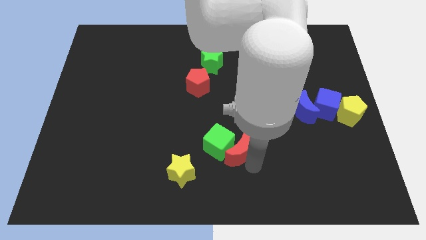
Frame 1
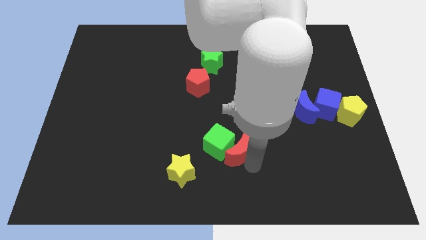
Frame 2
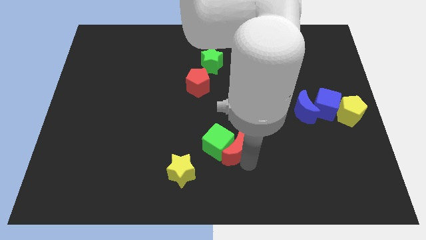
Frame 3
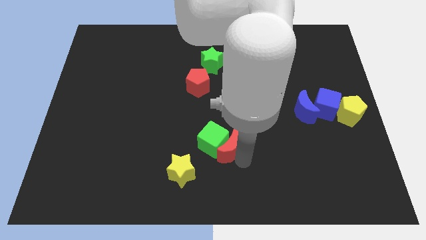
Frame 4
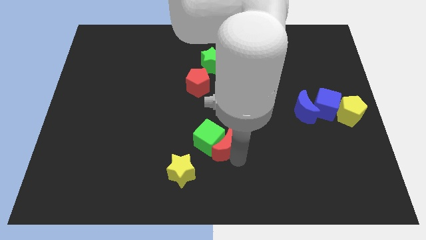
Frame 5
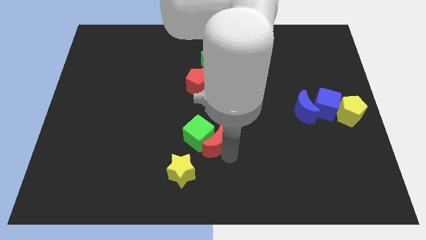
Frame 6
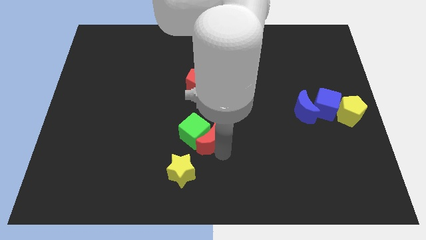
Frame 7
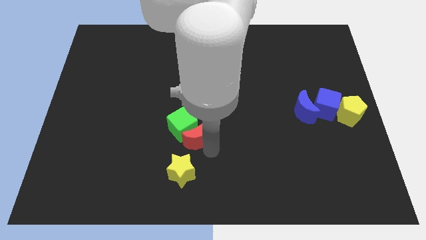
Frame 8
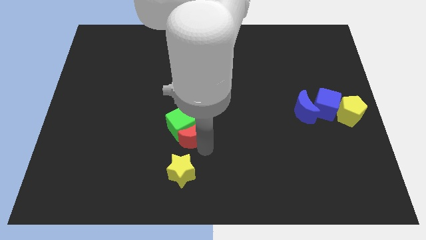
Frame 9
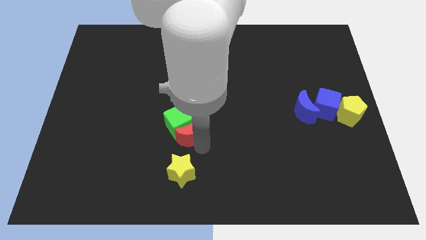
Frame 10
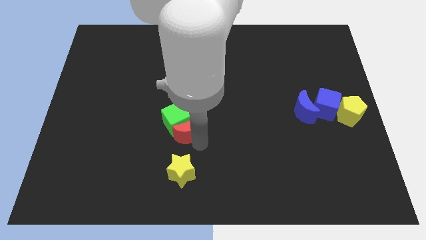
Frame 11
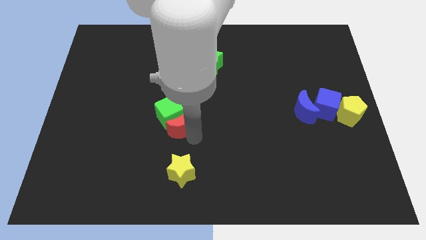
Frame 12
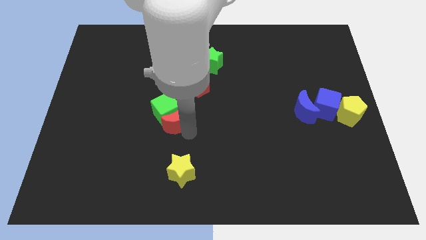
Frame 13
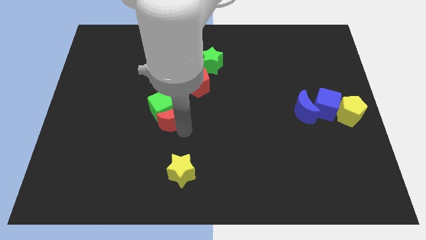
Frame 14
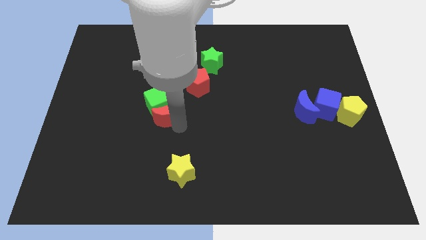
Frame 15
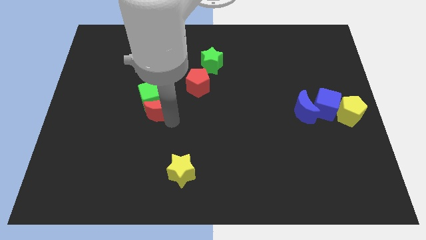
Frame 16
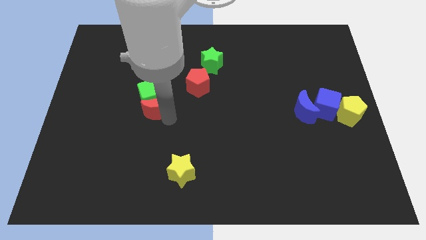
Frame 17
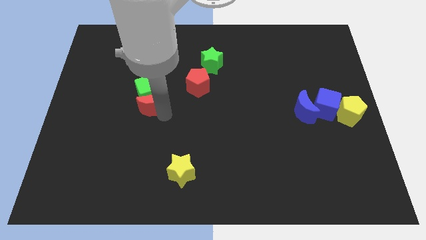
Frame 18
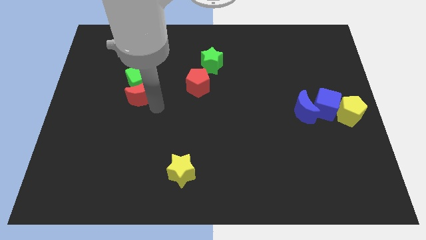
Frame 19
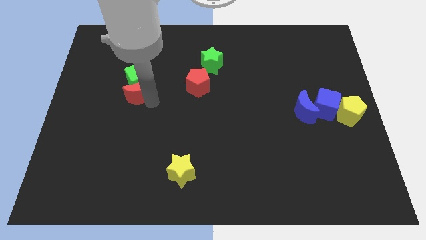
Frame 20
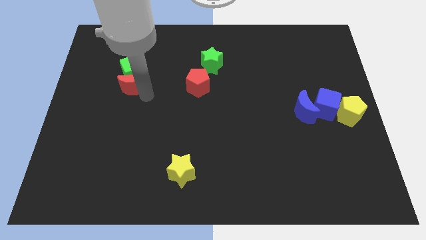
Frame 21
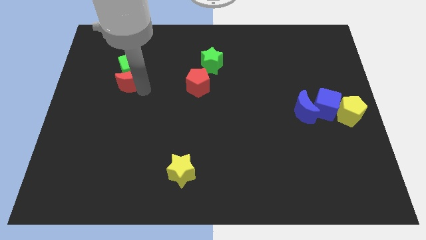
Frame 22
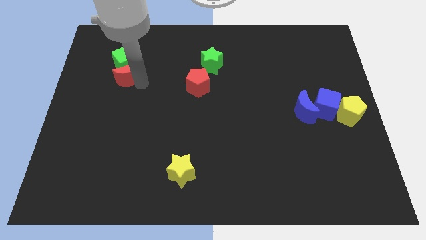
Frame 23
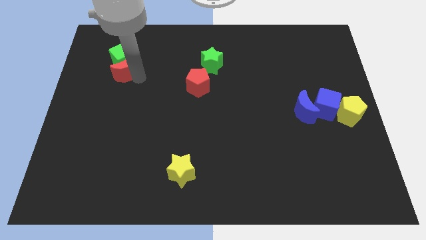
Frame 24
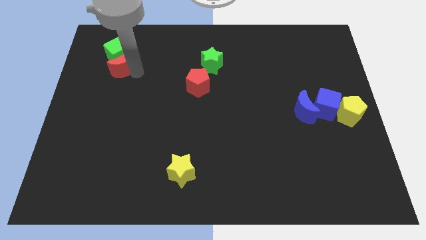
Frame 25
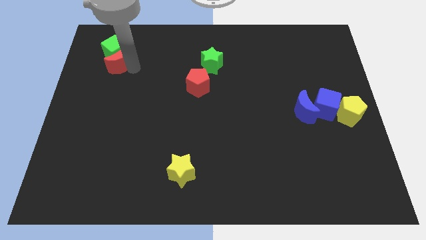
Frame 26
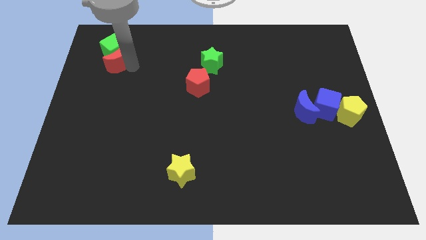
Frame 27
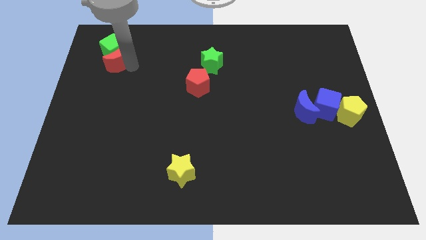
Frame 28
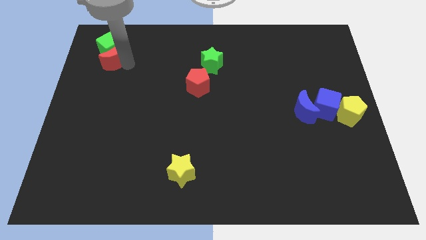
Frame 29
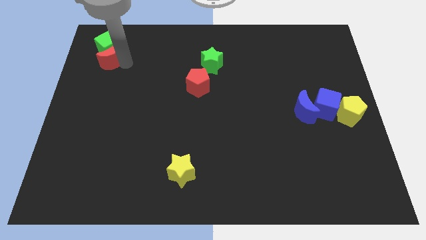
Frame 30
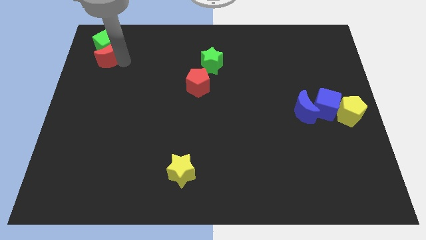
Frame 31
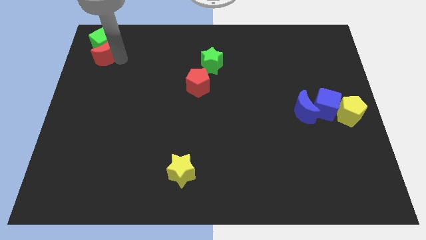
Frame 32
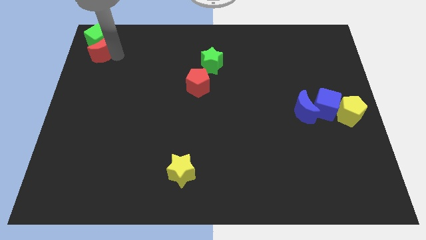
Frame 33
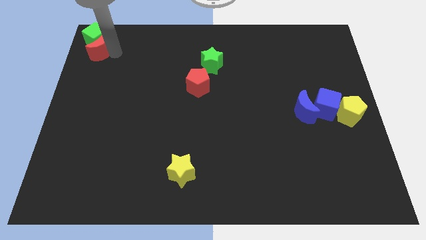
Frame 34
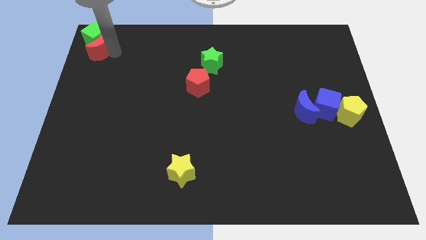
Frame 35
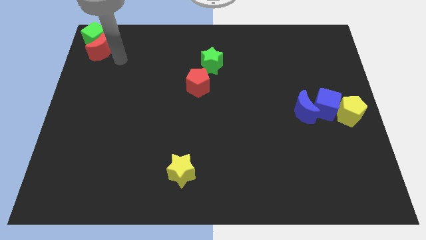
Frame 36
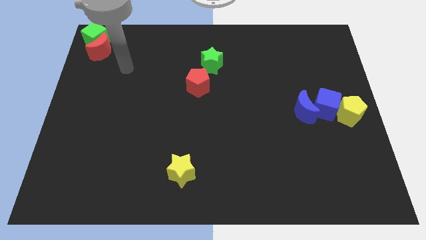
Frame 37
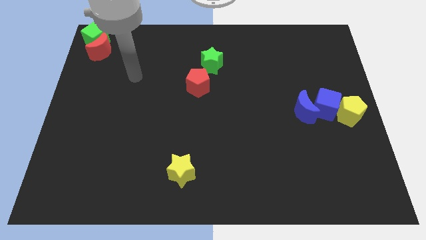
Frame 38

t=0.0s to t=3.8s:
place the red crescent and green cube at the top left corner of the board

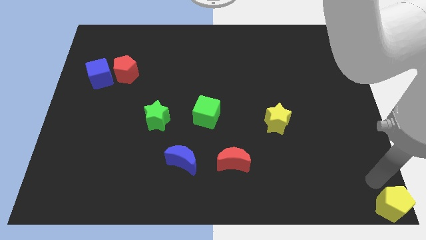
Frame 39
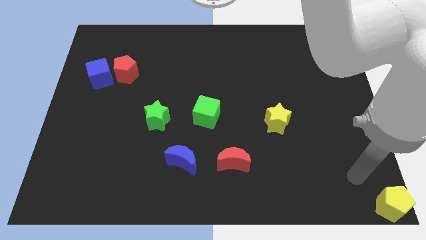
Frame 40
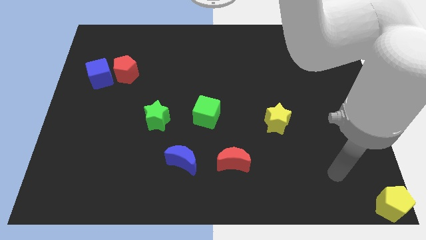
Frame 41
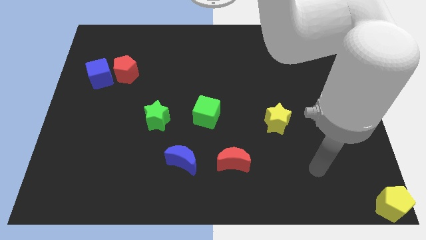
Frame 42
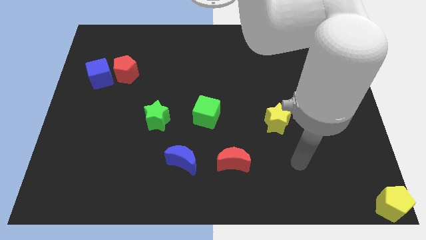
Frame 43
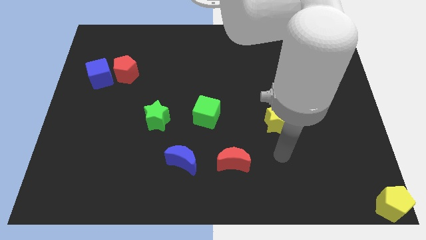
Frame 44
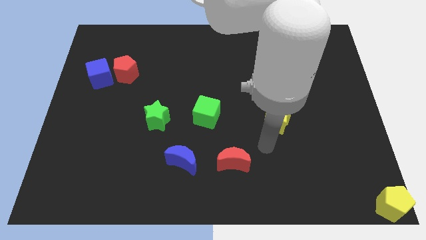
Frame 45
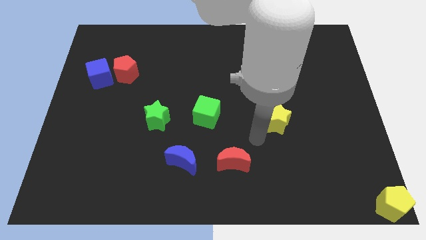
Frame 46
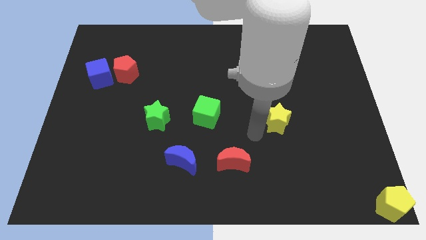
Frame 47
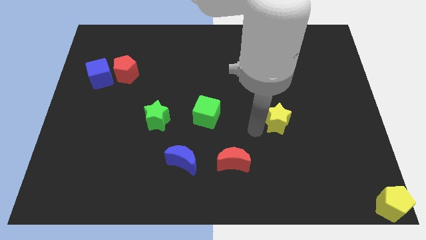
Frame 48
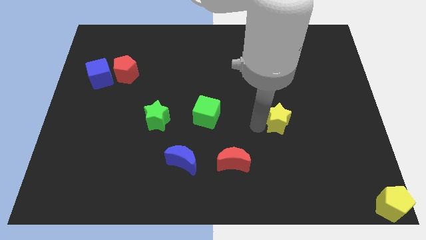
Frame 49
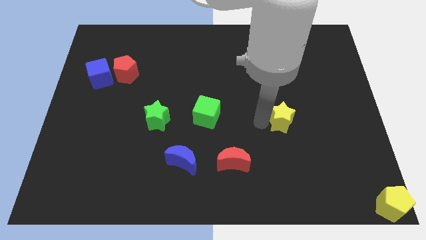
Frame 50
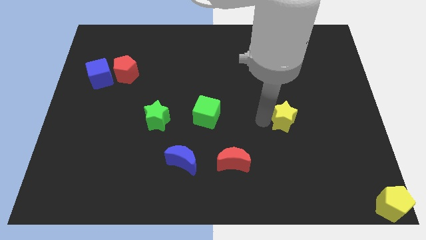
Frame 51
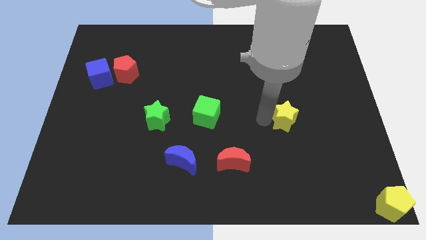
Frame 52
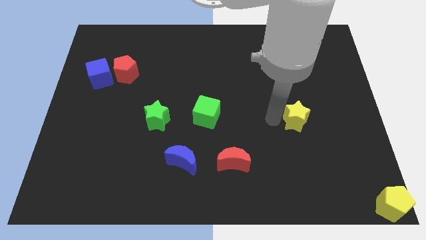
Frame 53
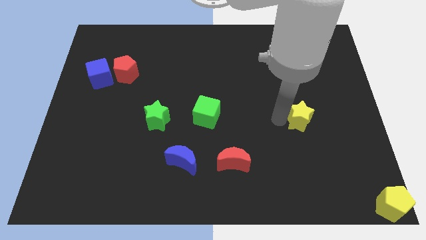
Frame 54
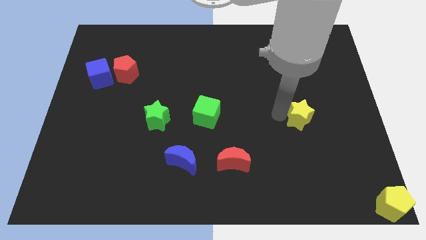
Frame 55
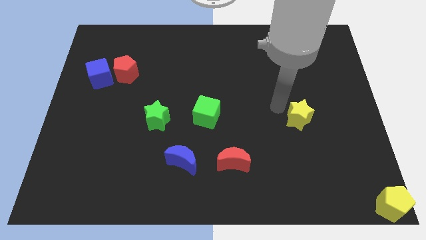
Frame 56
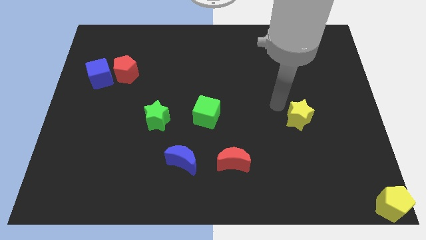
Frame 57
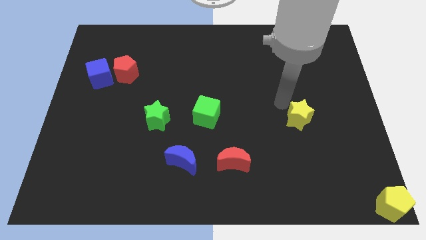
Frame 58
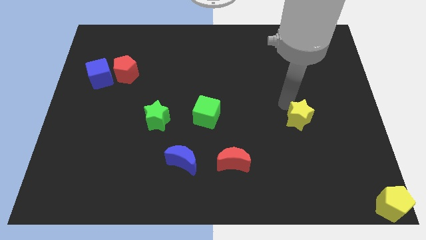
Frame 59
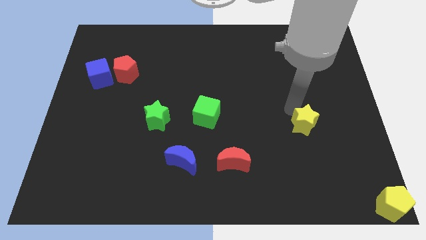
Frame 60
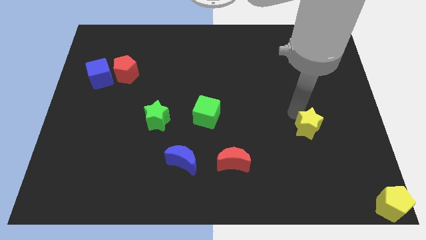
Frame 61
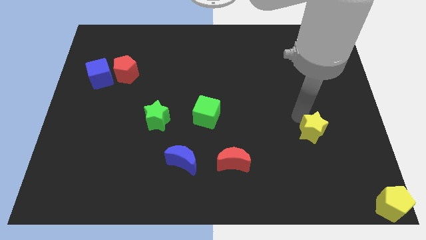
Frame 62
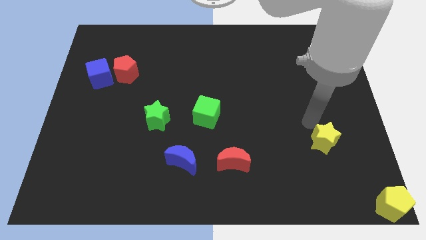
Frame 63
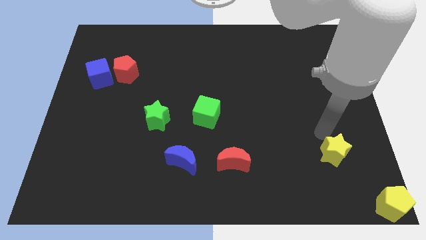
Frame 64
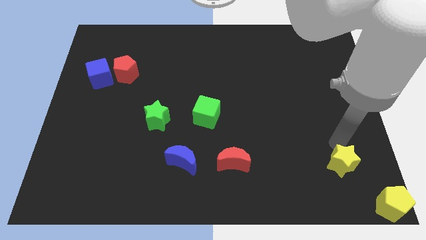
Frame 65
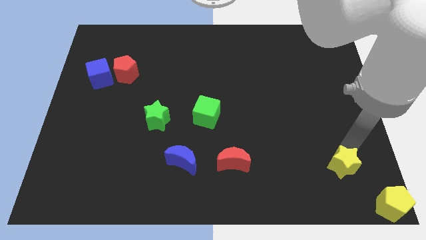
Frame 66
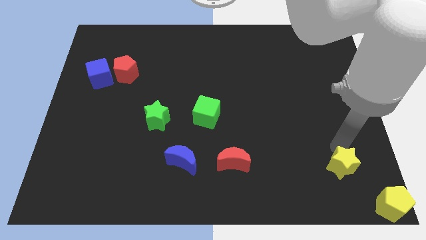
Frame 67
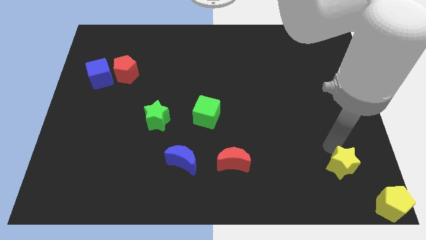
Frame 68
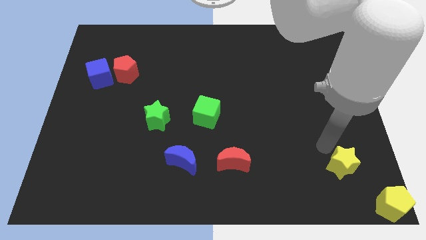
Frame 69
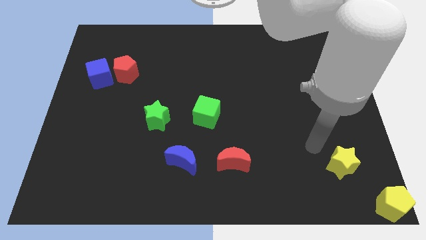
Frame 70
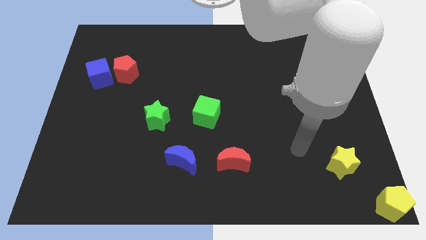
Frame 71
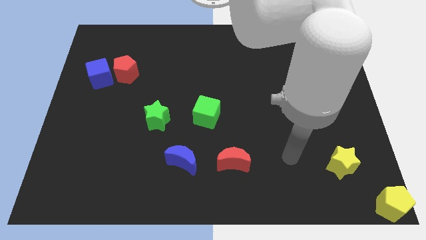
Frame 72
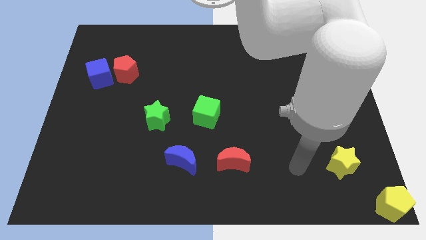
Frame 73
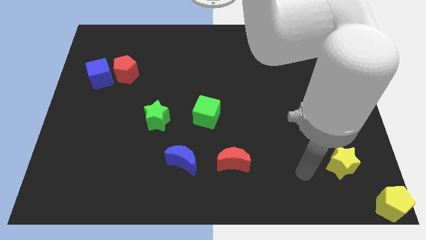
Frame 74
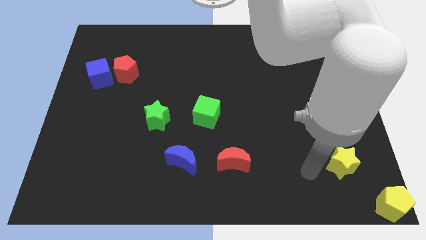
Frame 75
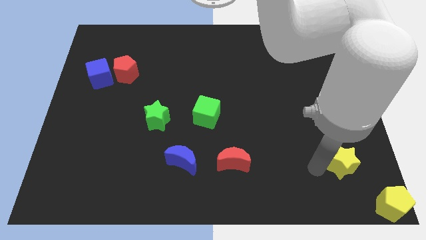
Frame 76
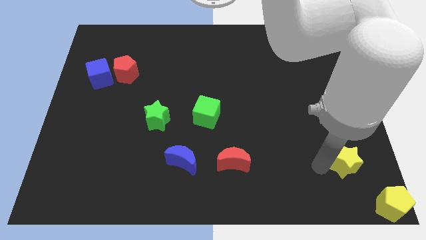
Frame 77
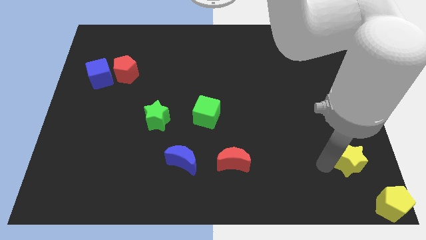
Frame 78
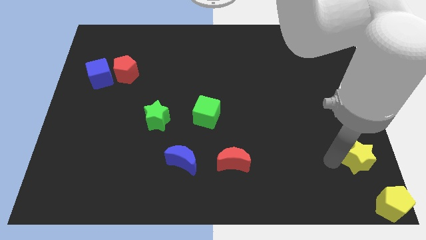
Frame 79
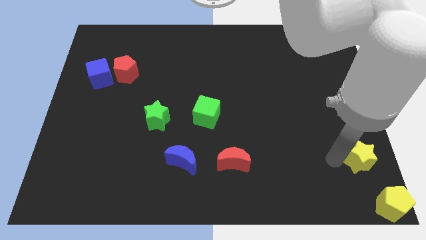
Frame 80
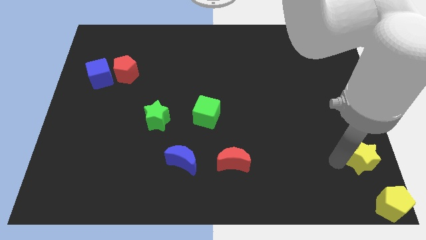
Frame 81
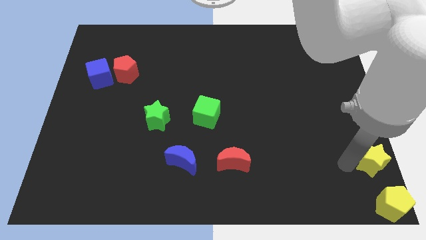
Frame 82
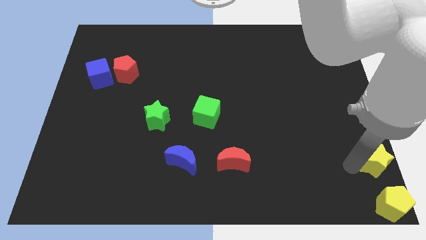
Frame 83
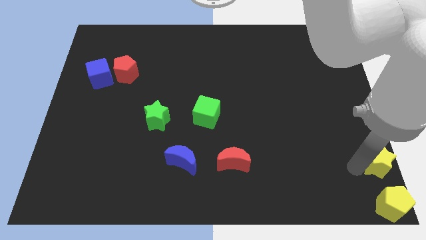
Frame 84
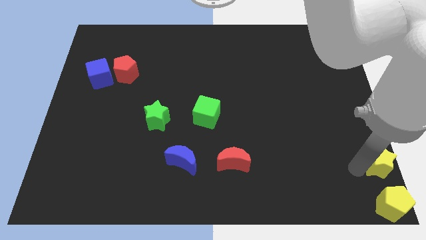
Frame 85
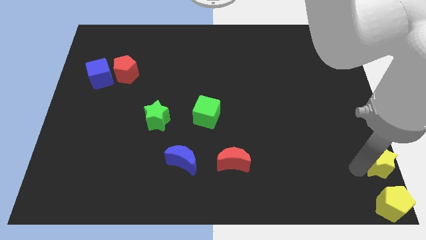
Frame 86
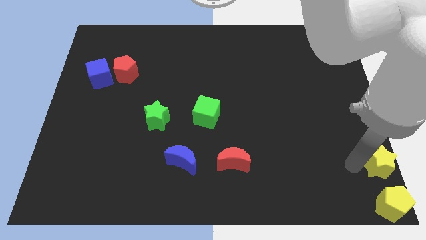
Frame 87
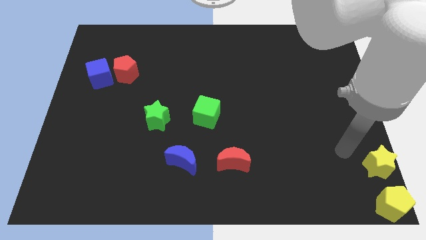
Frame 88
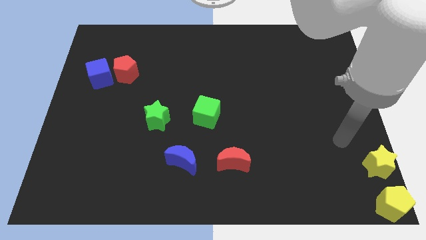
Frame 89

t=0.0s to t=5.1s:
place the yellow star to the top of the yellow pentagon

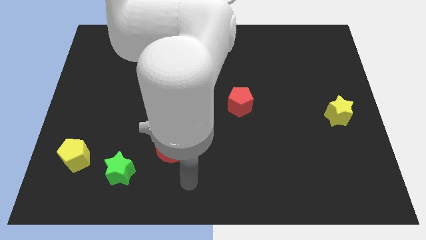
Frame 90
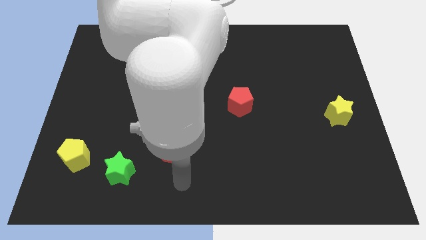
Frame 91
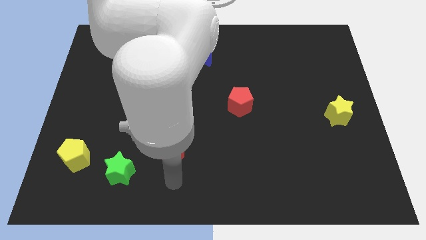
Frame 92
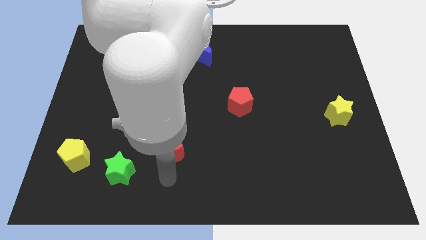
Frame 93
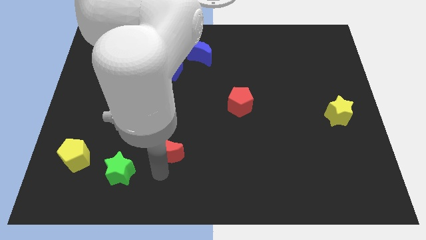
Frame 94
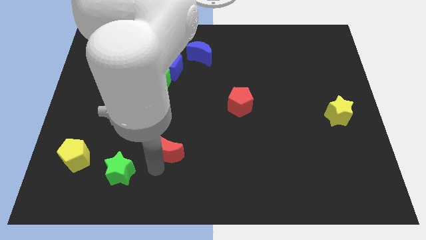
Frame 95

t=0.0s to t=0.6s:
push arm below red crescent
